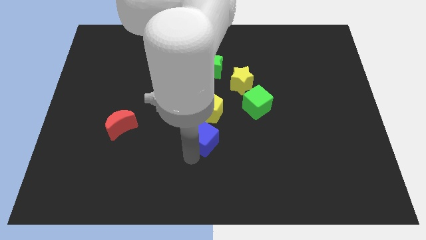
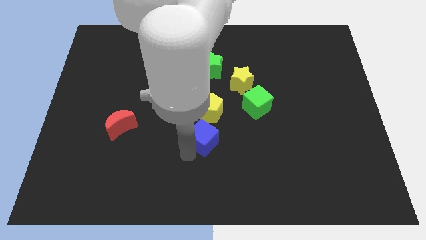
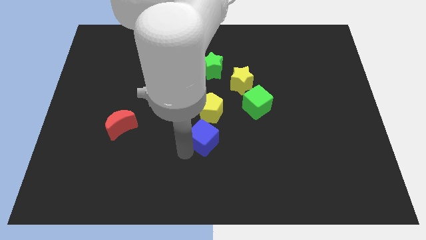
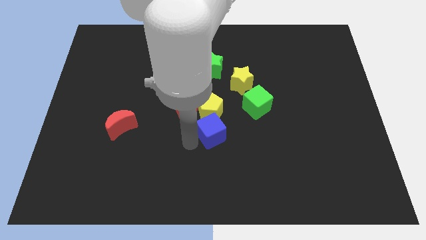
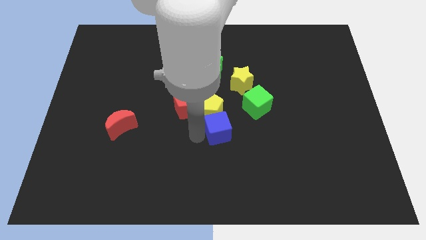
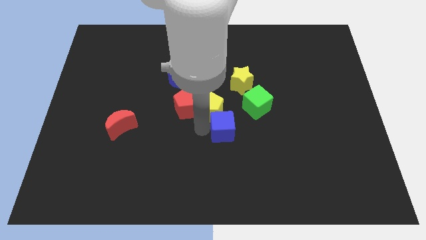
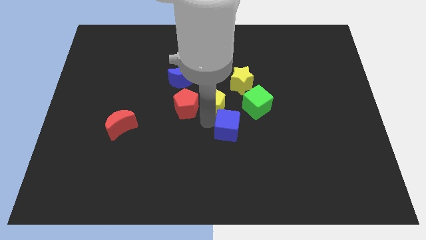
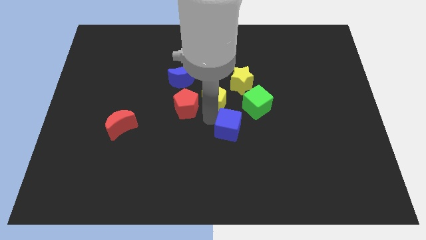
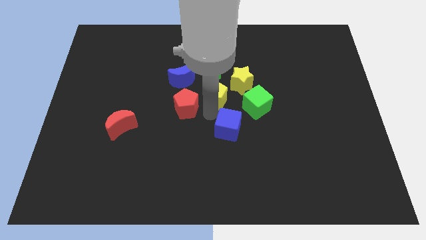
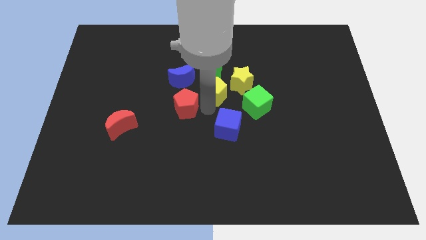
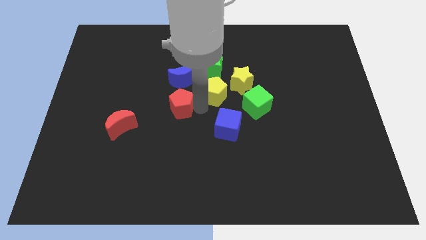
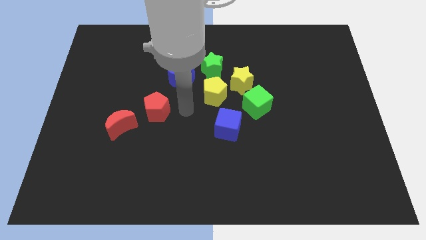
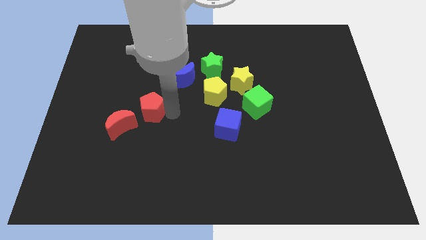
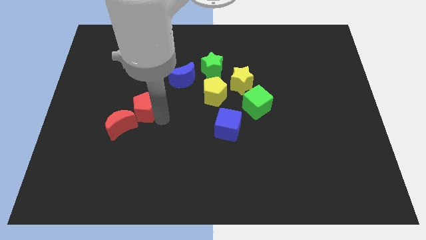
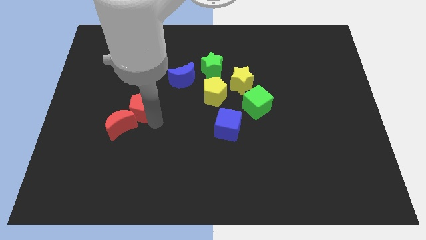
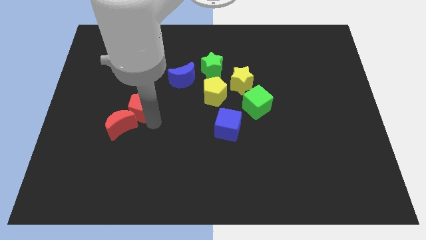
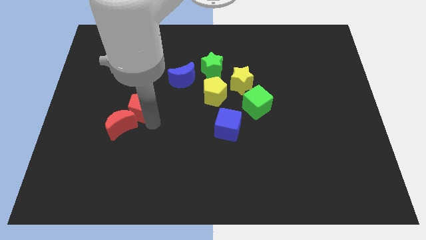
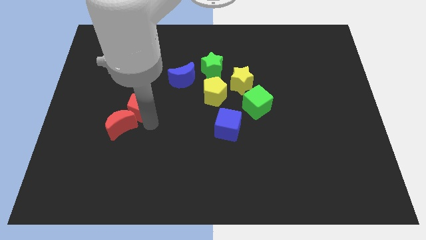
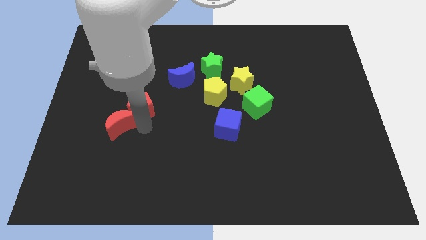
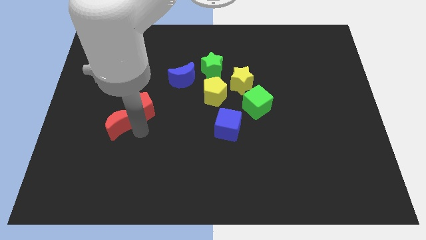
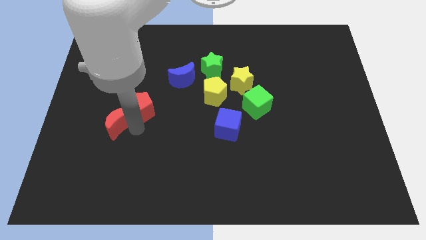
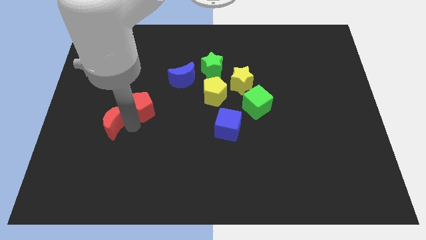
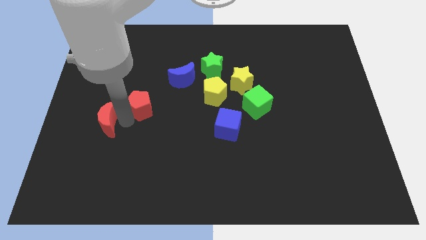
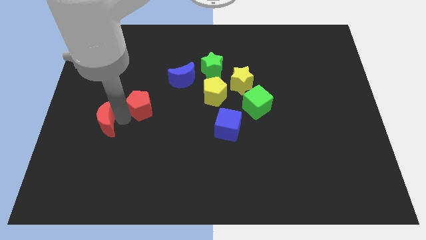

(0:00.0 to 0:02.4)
move the yellow star slightly up

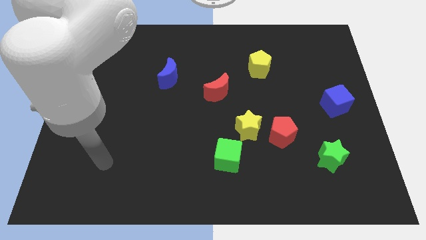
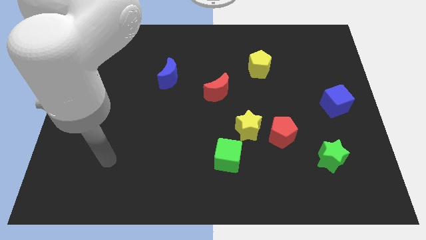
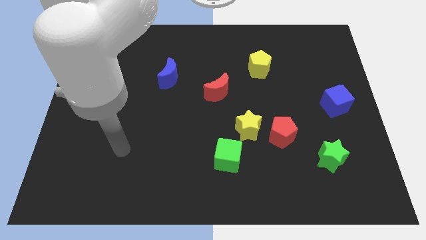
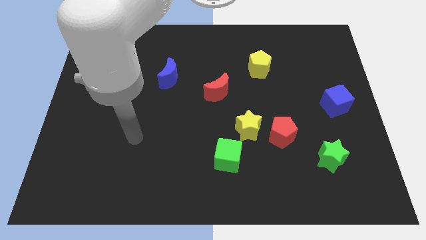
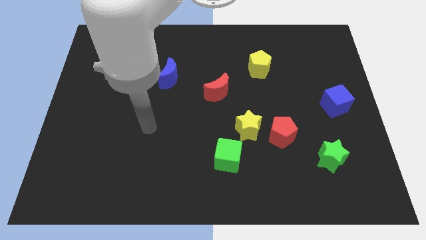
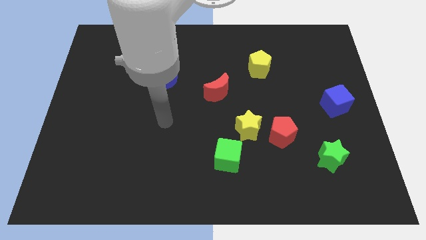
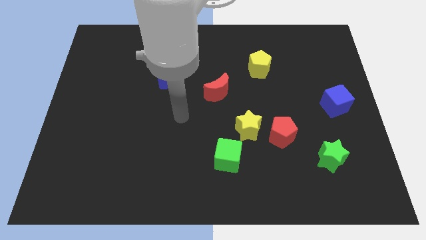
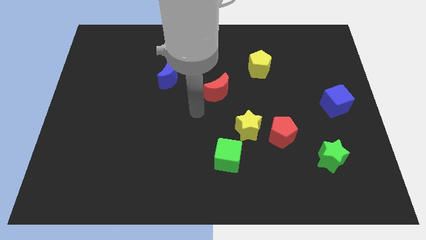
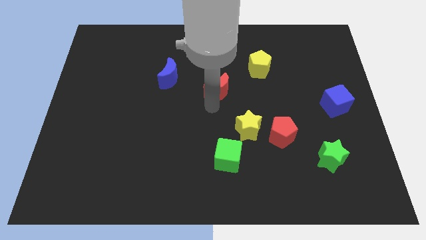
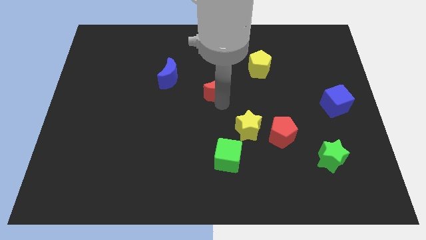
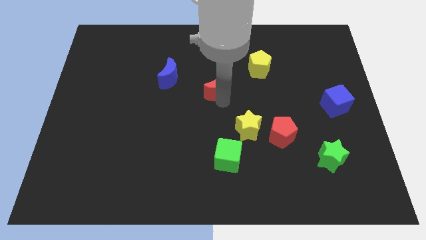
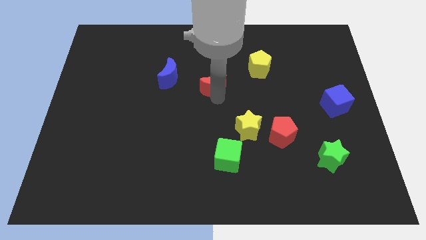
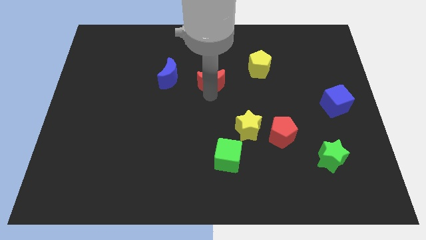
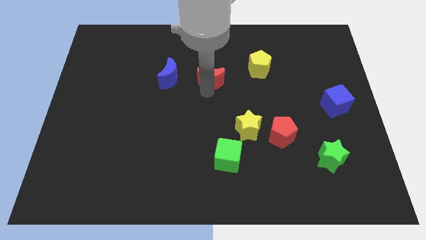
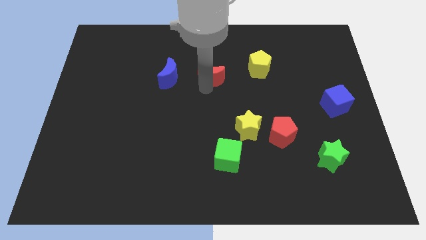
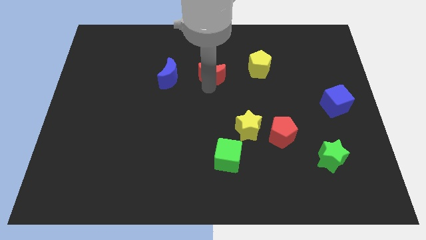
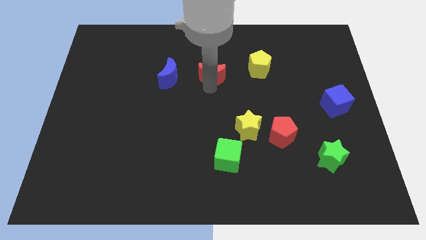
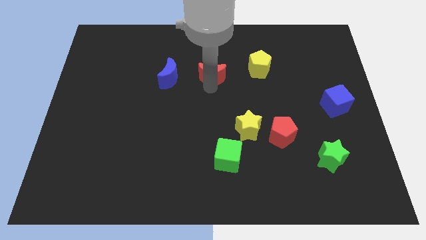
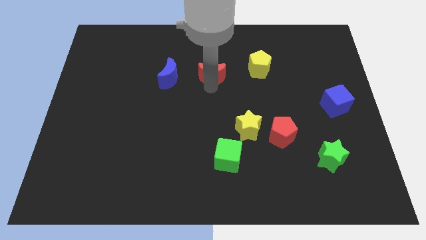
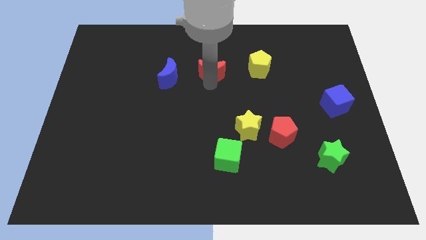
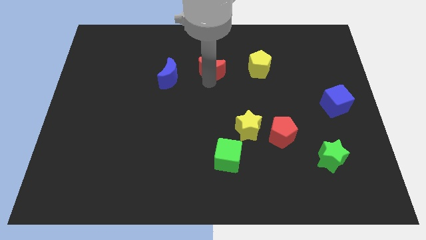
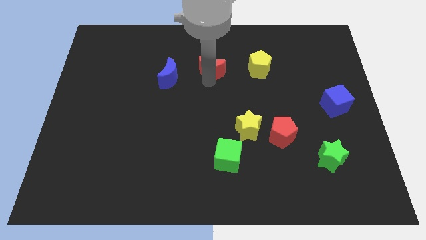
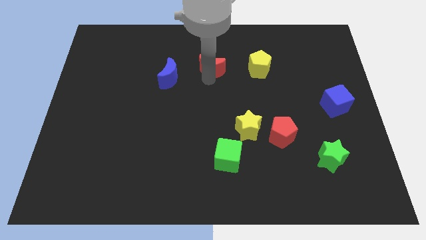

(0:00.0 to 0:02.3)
place the red crescent horizontally to the left side of the yellow pentagon

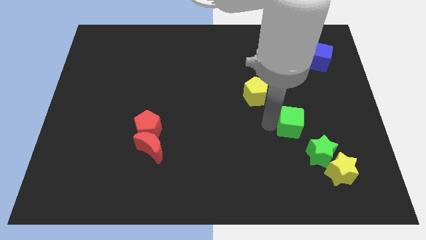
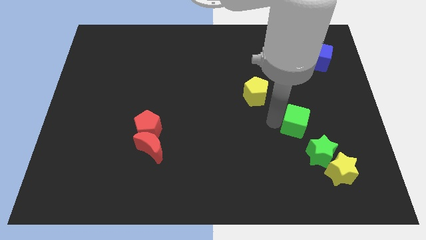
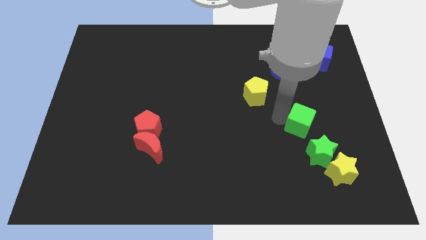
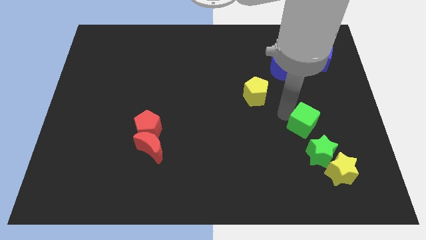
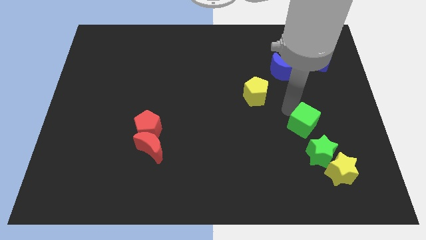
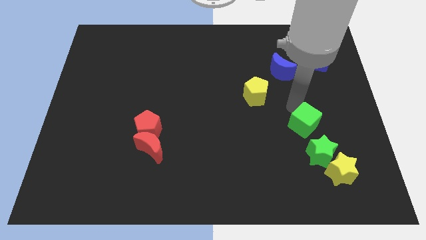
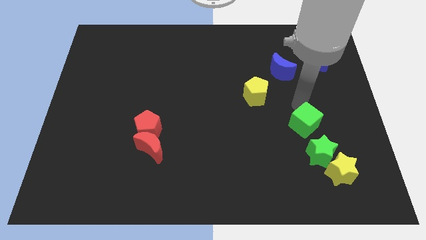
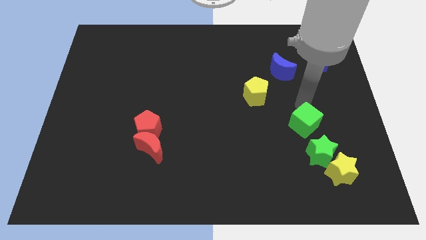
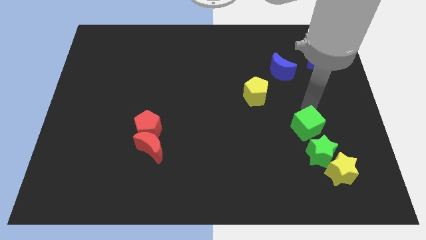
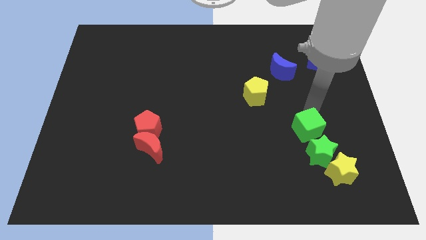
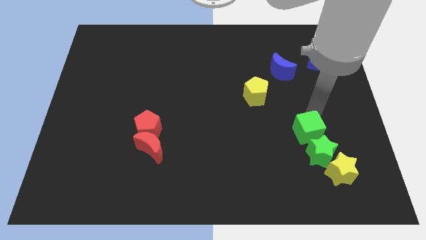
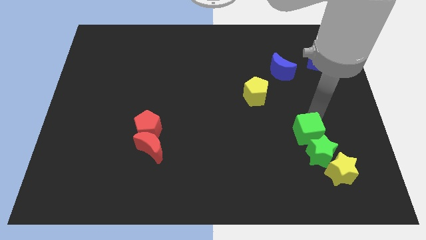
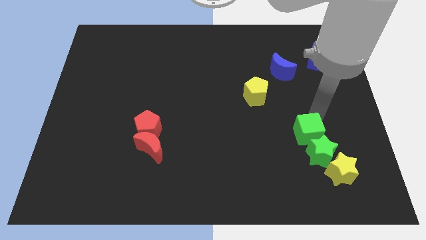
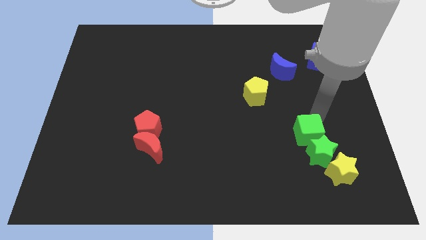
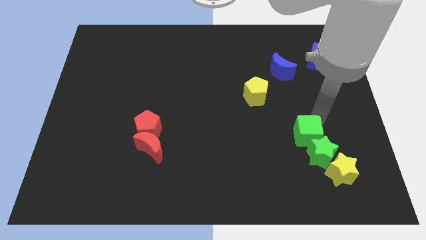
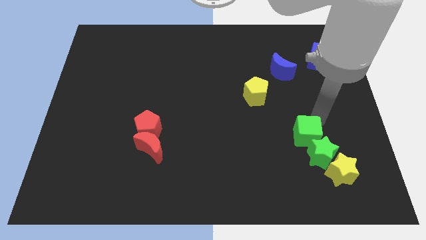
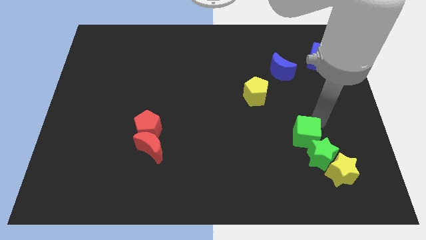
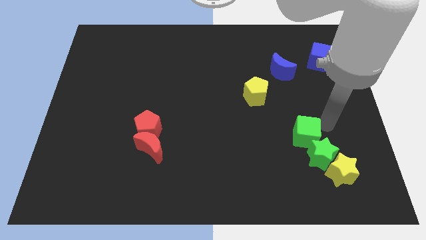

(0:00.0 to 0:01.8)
place the green cube above the green star

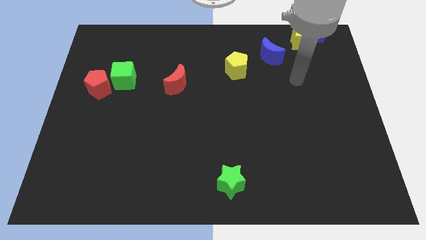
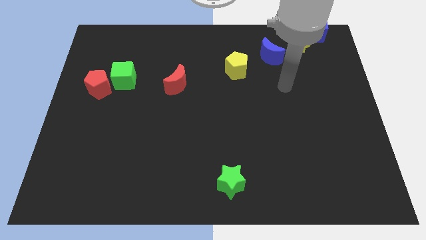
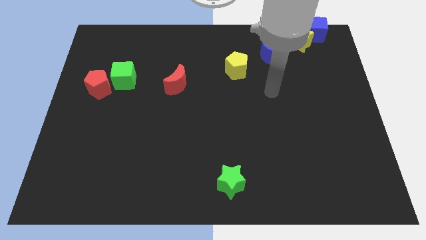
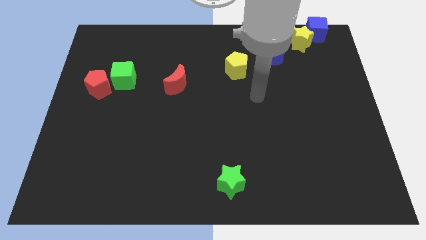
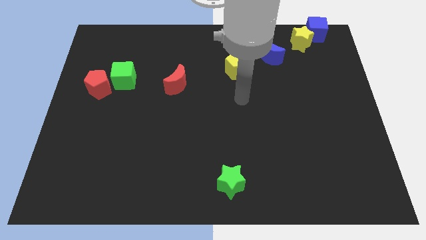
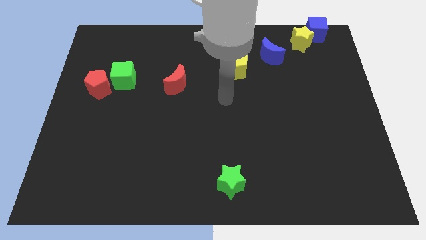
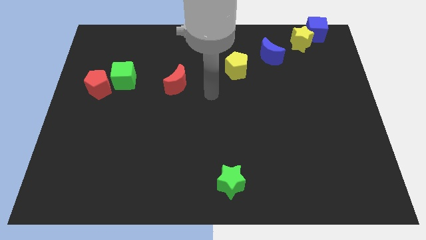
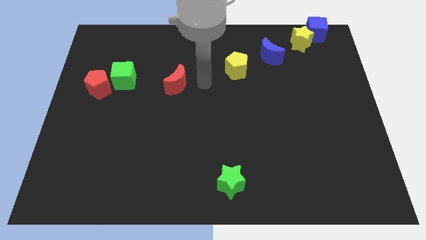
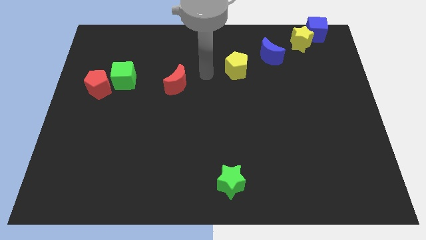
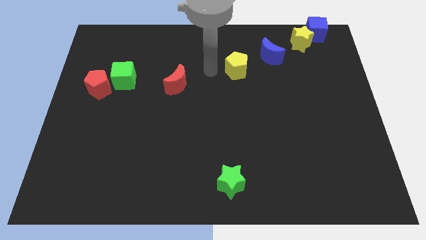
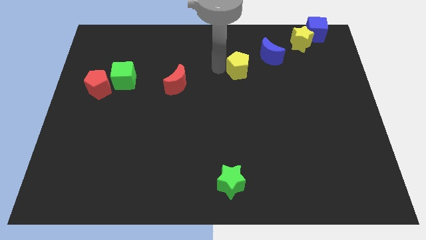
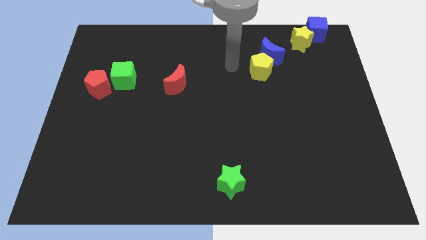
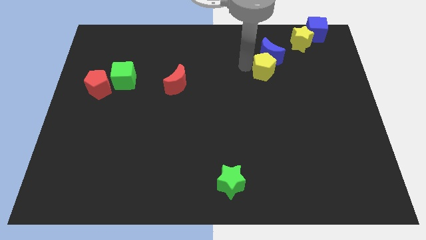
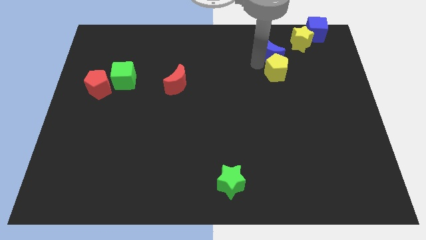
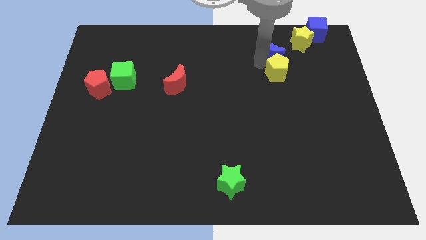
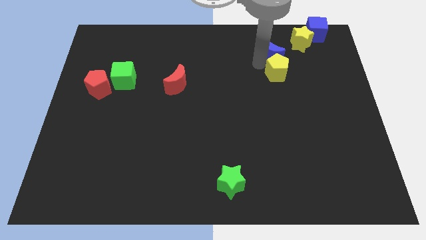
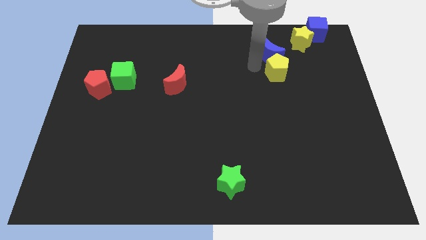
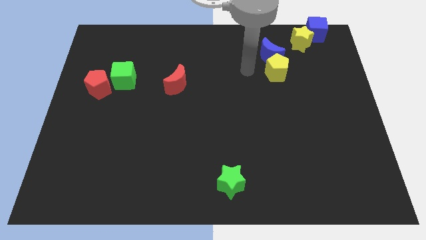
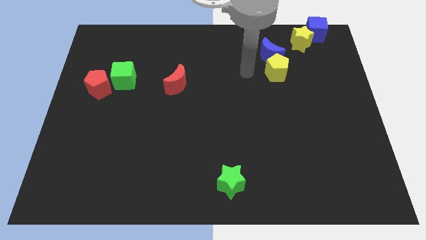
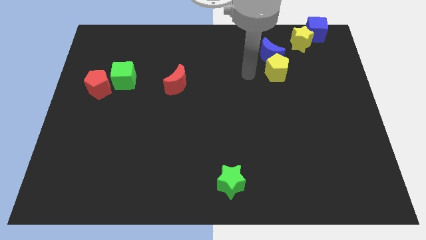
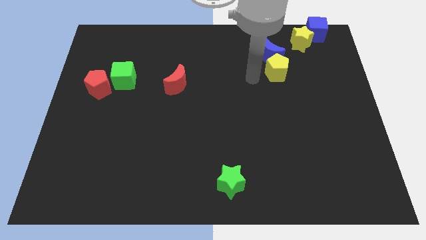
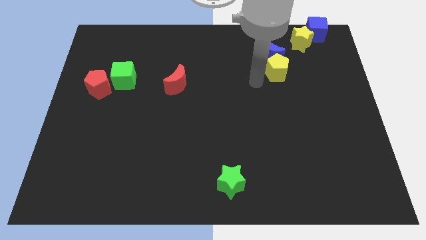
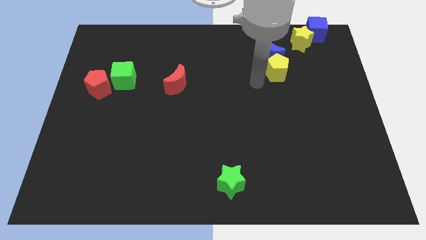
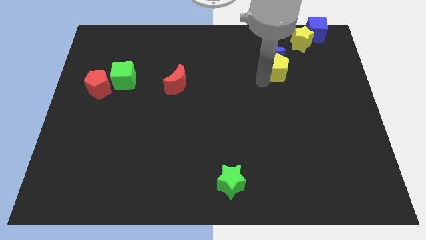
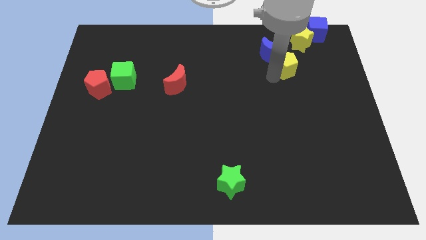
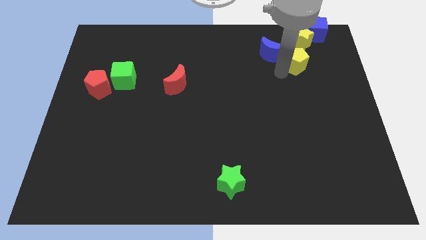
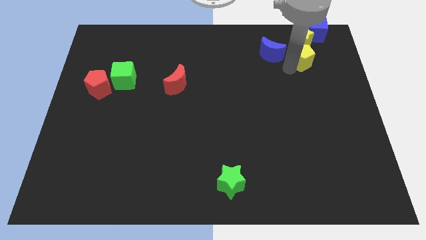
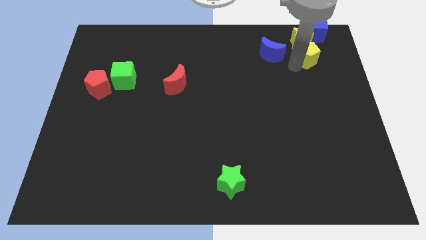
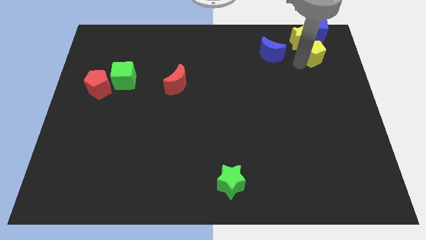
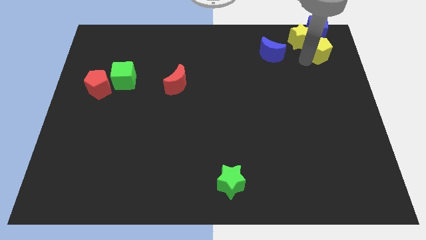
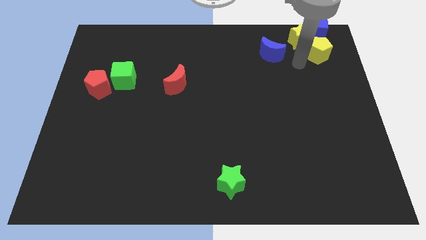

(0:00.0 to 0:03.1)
push yellow pentagon below blue cube
